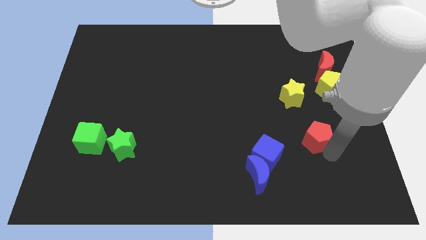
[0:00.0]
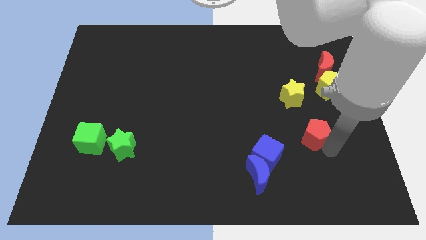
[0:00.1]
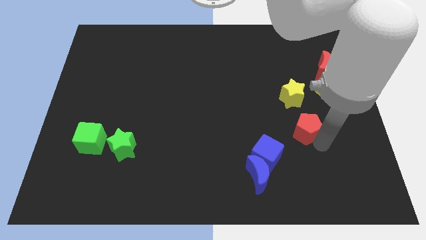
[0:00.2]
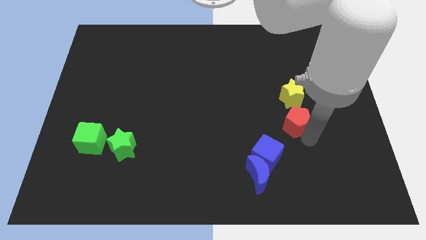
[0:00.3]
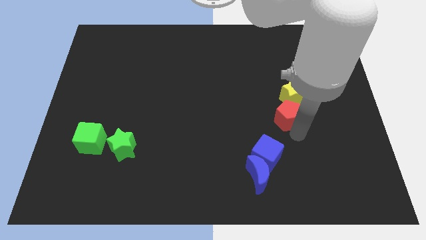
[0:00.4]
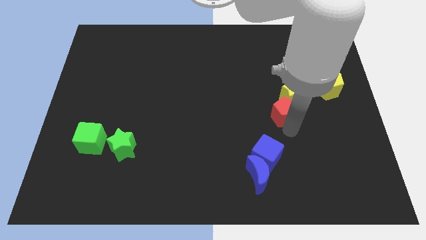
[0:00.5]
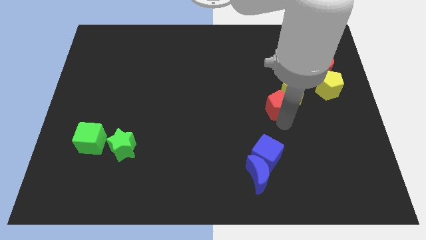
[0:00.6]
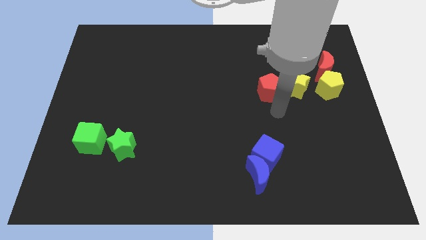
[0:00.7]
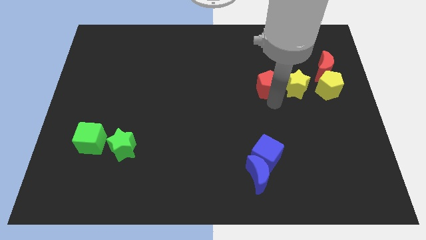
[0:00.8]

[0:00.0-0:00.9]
place the red pentagon to the left of the yellow star

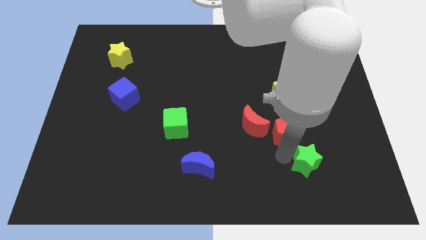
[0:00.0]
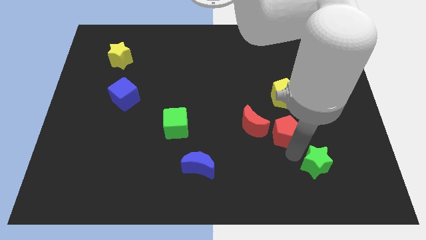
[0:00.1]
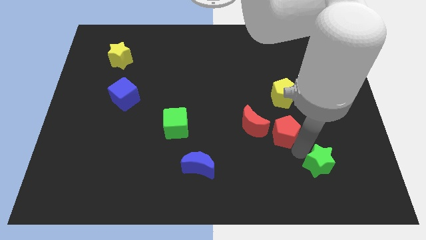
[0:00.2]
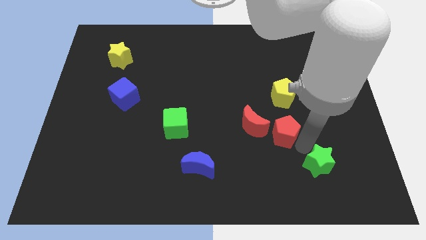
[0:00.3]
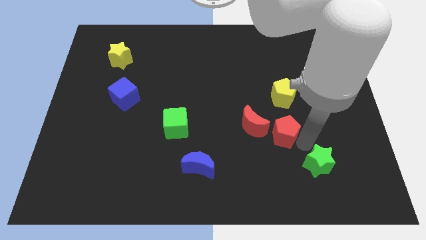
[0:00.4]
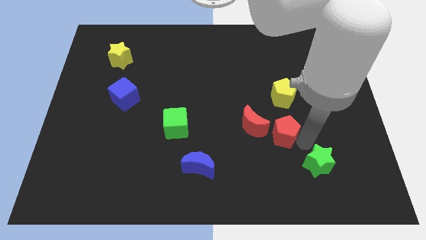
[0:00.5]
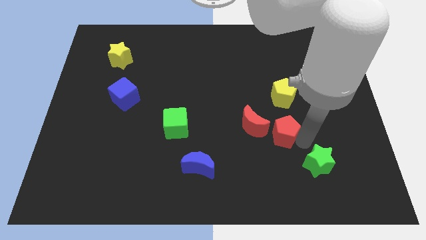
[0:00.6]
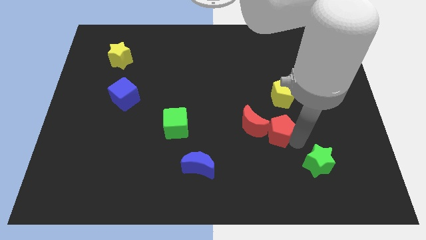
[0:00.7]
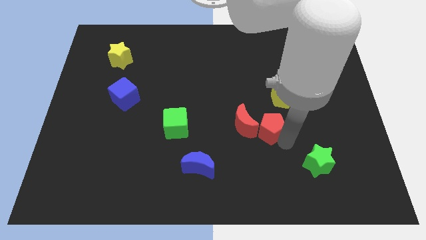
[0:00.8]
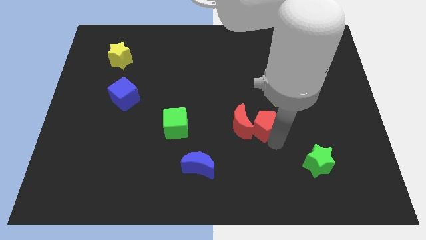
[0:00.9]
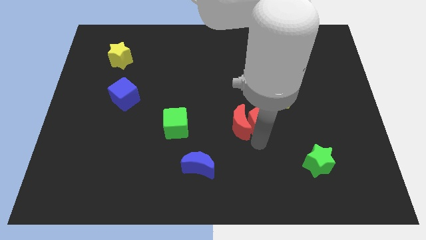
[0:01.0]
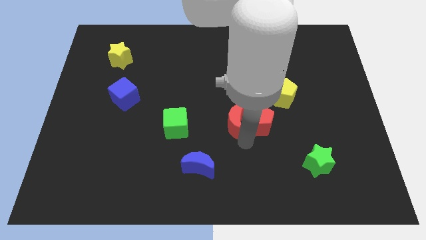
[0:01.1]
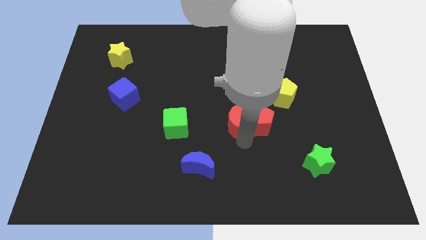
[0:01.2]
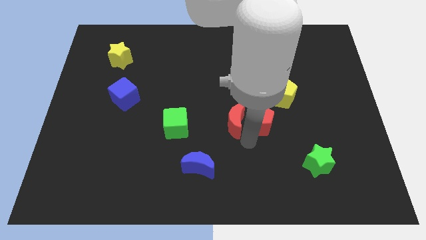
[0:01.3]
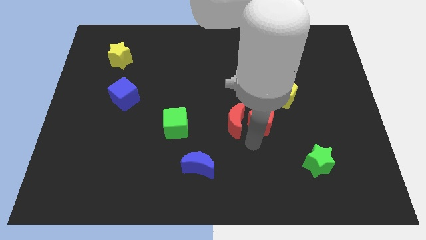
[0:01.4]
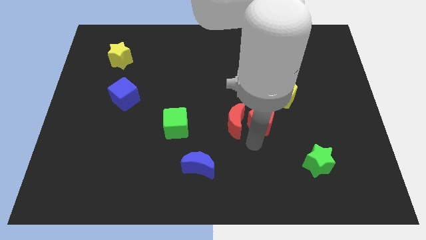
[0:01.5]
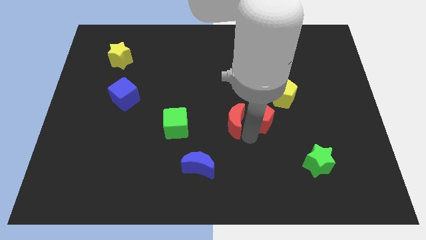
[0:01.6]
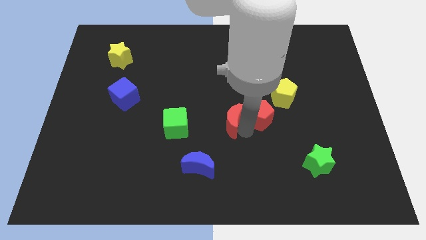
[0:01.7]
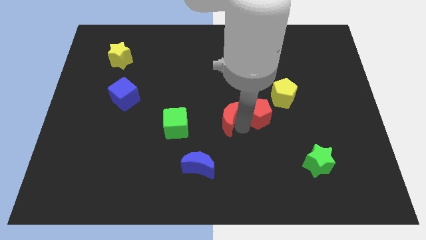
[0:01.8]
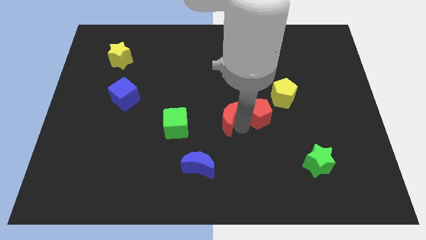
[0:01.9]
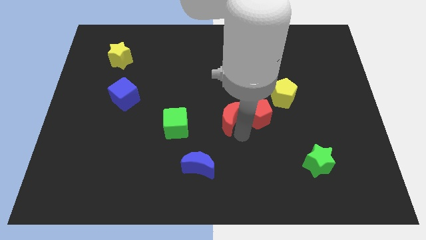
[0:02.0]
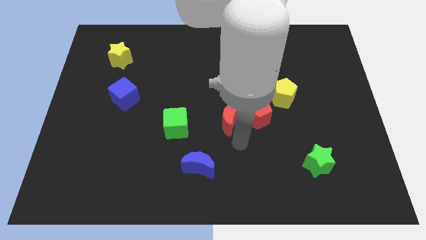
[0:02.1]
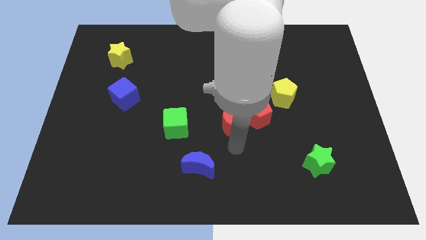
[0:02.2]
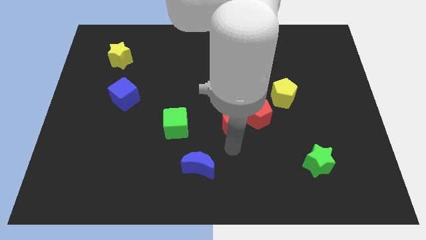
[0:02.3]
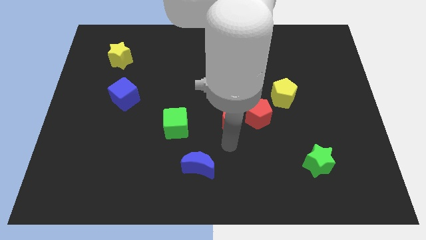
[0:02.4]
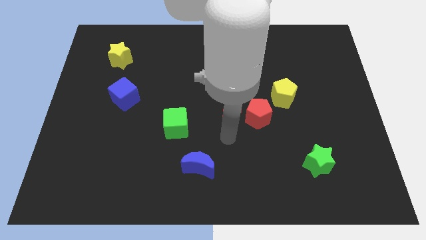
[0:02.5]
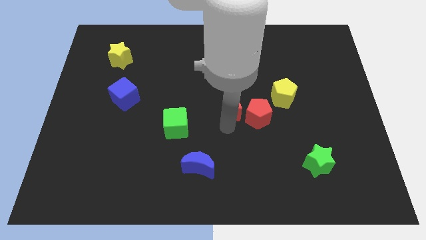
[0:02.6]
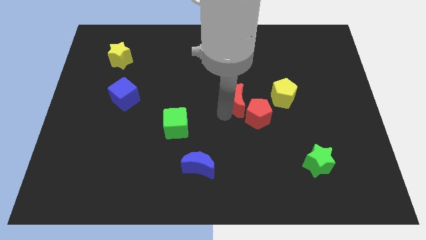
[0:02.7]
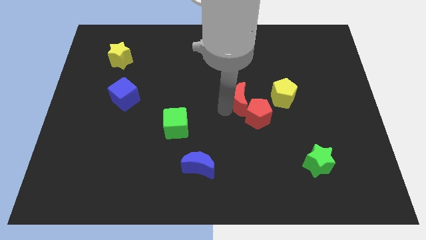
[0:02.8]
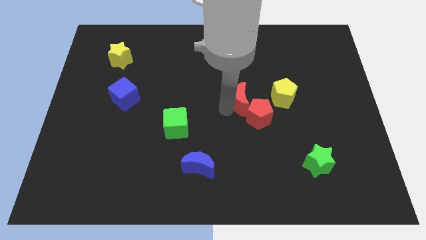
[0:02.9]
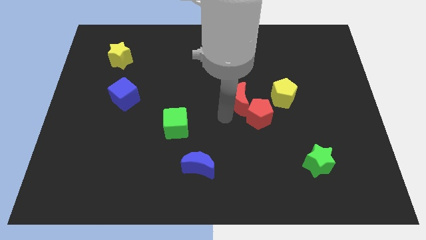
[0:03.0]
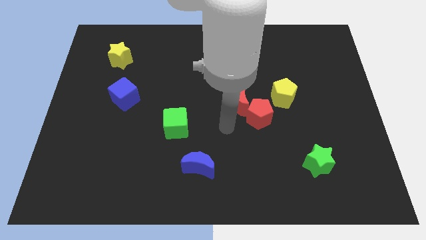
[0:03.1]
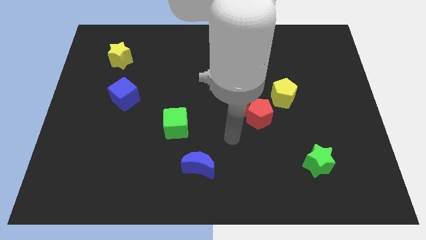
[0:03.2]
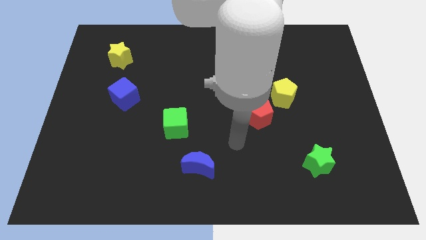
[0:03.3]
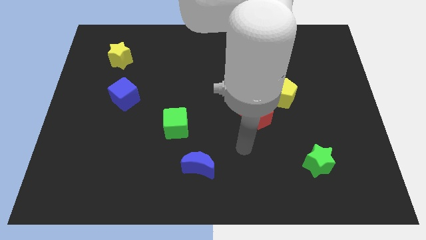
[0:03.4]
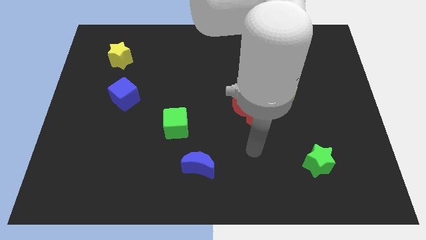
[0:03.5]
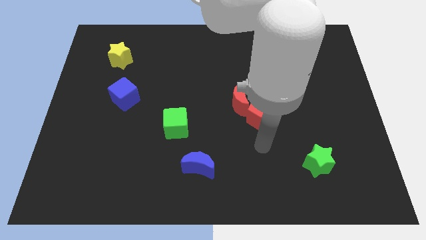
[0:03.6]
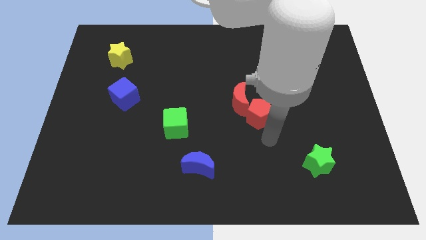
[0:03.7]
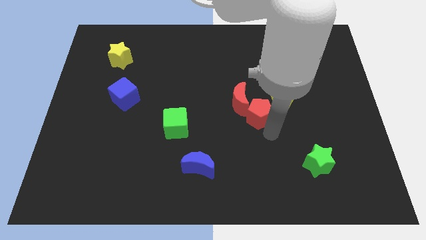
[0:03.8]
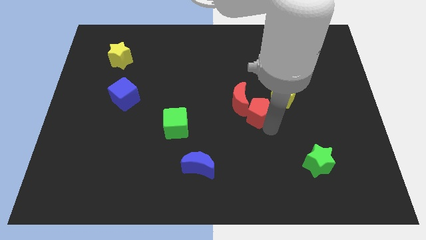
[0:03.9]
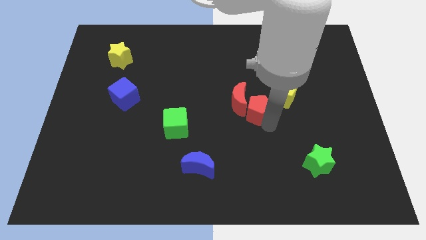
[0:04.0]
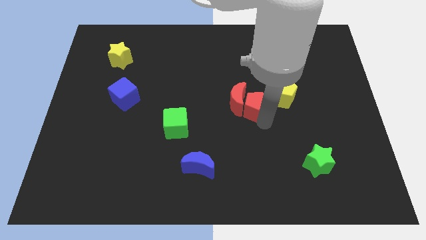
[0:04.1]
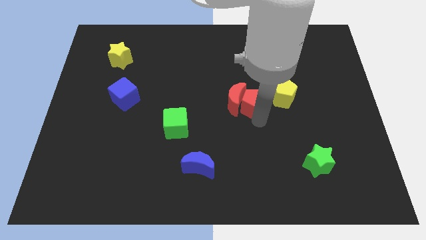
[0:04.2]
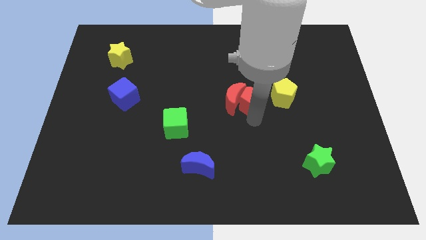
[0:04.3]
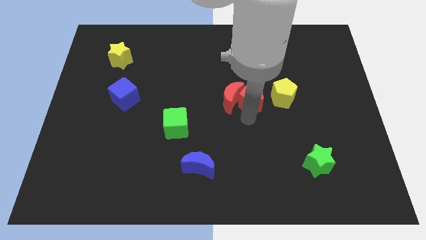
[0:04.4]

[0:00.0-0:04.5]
push the red pentagon into the red moon

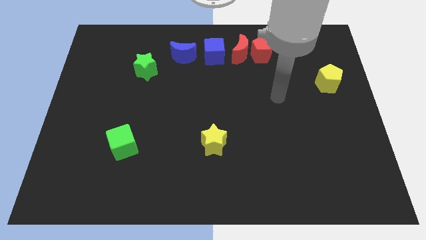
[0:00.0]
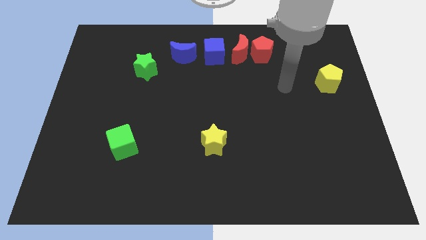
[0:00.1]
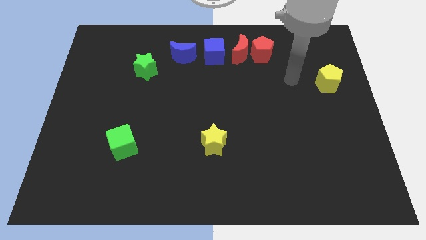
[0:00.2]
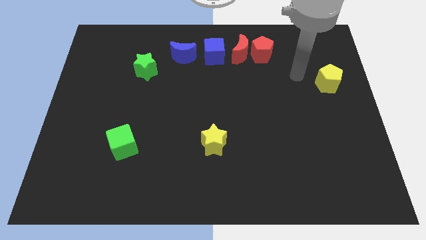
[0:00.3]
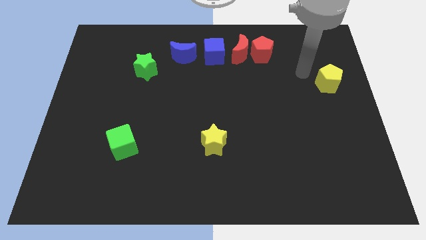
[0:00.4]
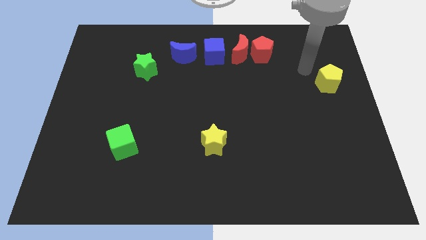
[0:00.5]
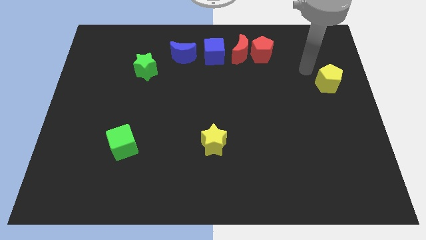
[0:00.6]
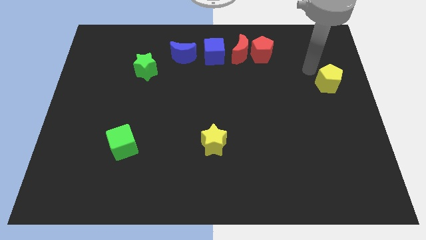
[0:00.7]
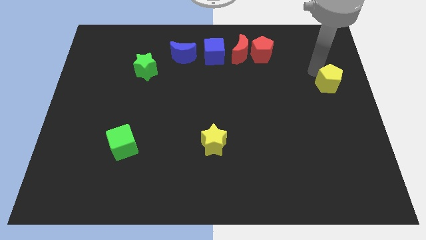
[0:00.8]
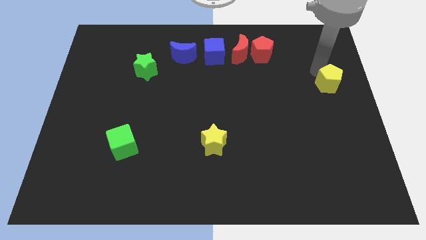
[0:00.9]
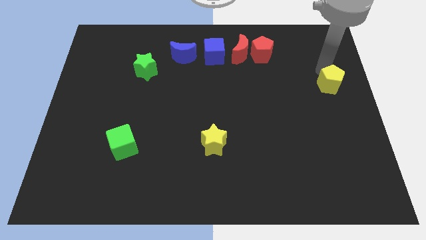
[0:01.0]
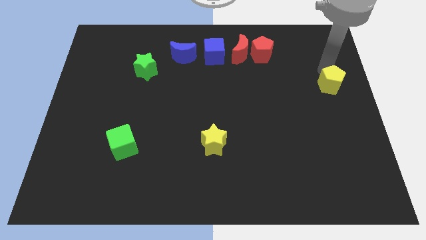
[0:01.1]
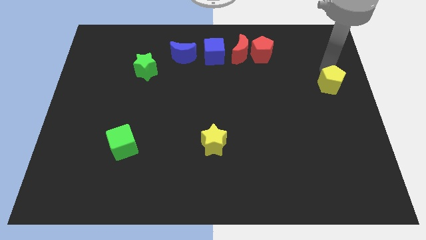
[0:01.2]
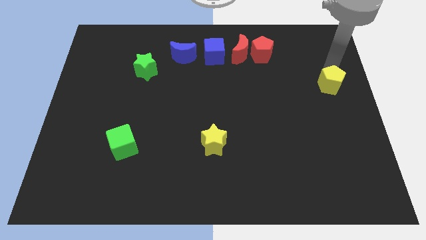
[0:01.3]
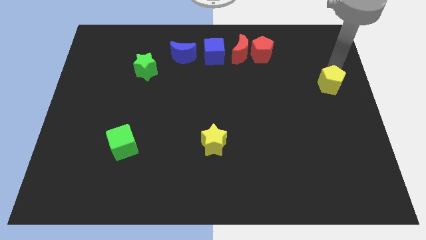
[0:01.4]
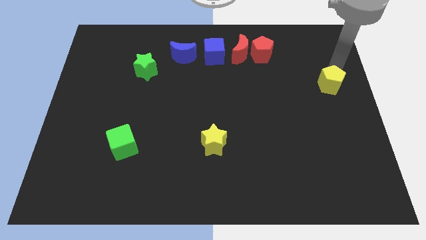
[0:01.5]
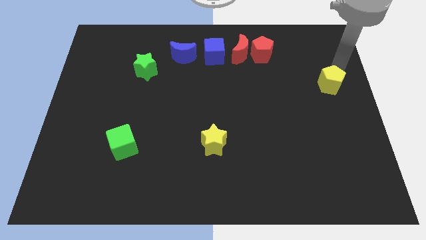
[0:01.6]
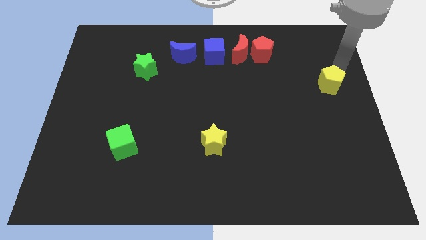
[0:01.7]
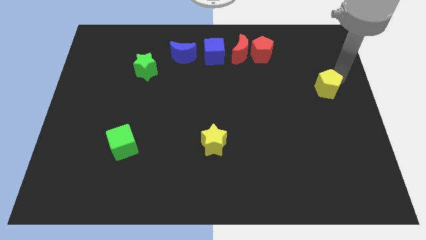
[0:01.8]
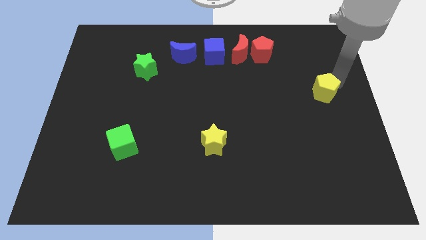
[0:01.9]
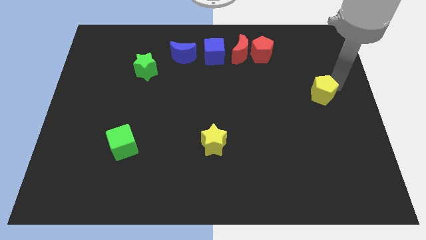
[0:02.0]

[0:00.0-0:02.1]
push the yellow pentagon slightly to the bottom

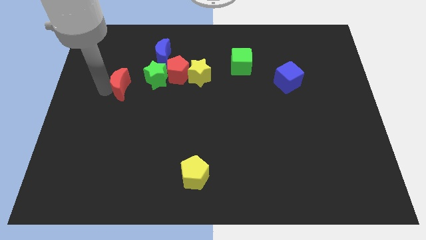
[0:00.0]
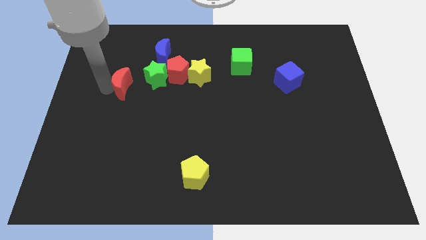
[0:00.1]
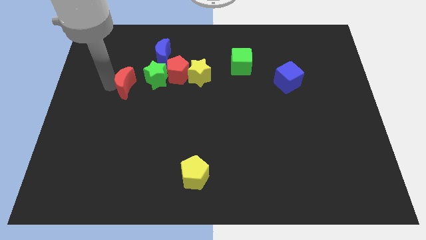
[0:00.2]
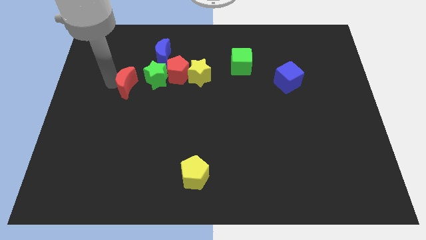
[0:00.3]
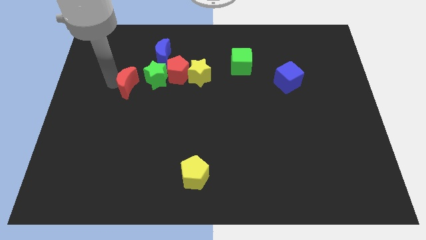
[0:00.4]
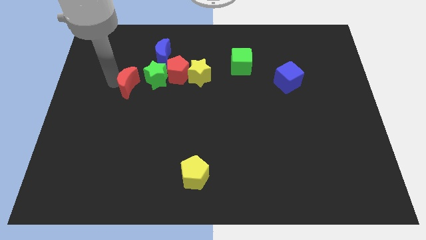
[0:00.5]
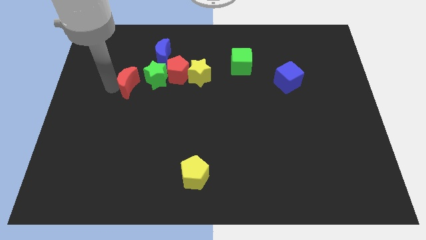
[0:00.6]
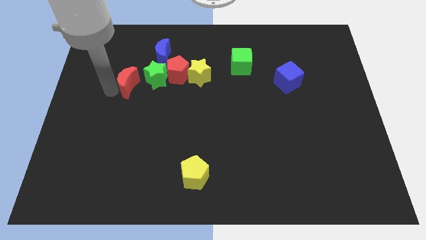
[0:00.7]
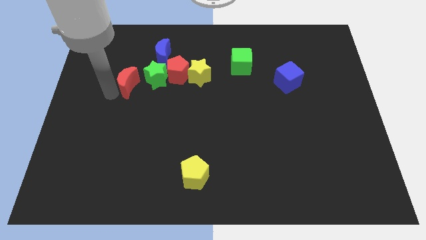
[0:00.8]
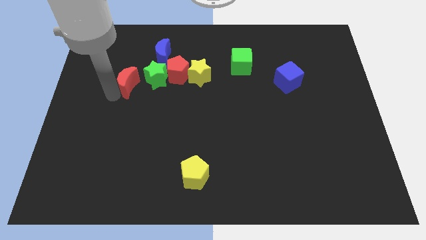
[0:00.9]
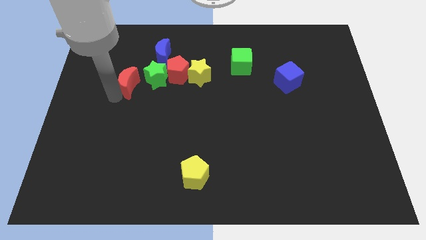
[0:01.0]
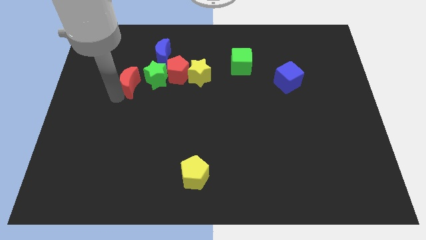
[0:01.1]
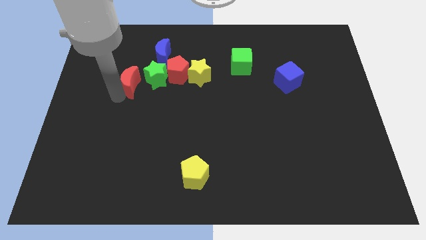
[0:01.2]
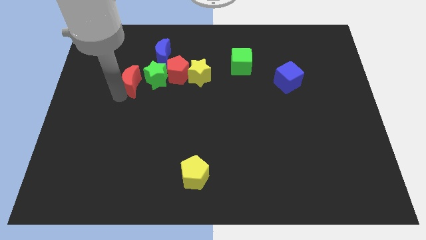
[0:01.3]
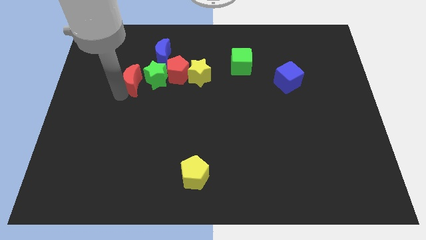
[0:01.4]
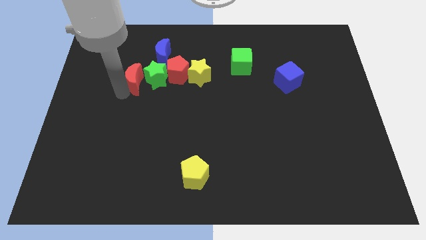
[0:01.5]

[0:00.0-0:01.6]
push red moon left to green star
